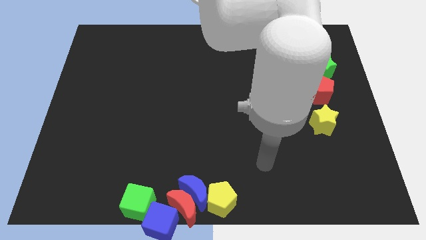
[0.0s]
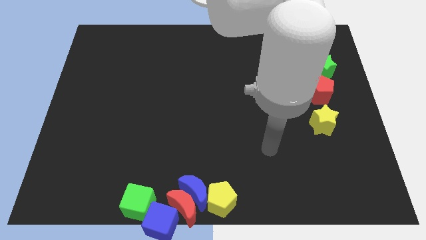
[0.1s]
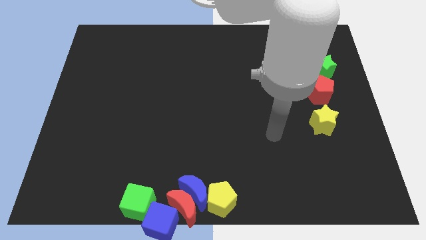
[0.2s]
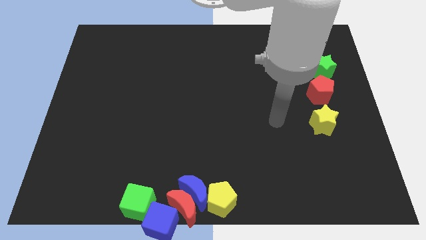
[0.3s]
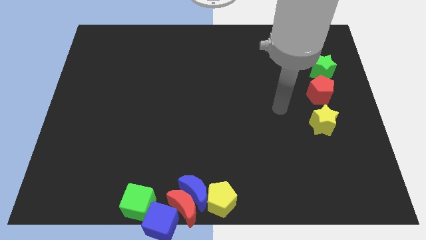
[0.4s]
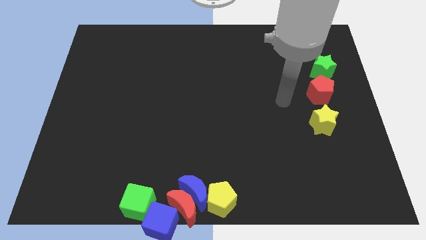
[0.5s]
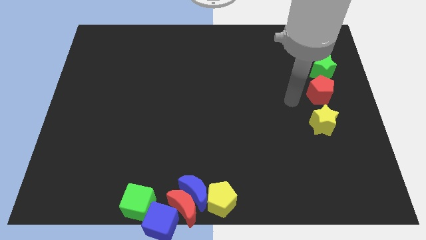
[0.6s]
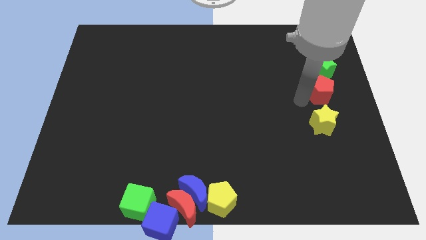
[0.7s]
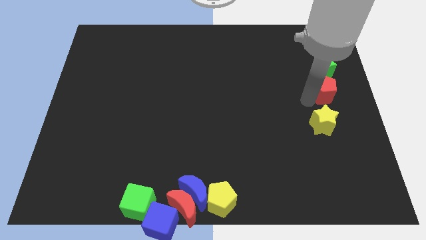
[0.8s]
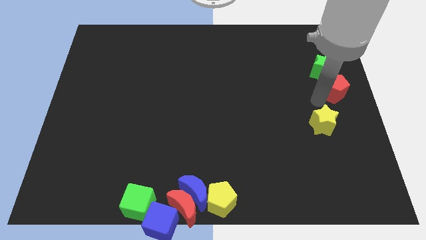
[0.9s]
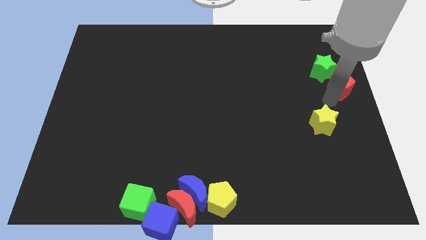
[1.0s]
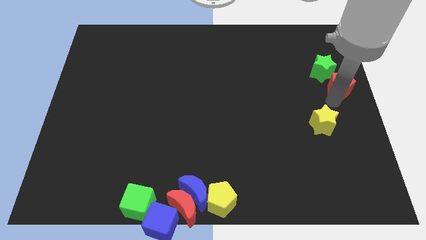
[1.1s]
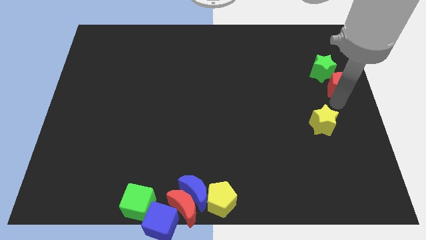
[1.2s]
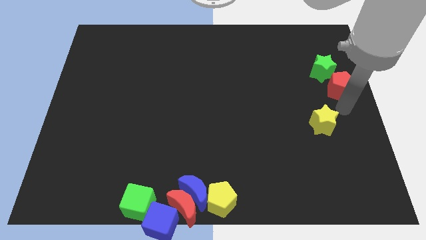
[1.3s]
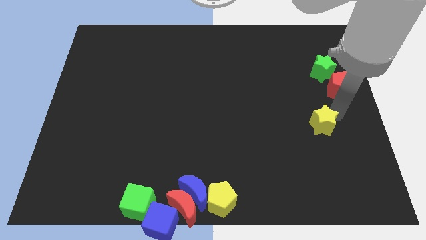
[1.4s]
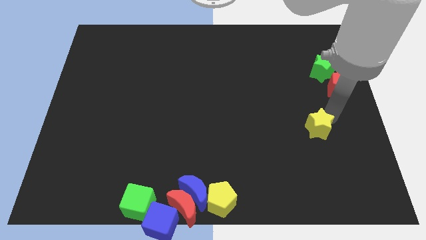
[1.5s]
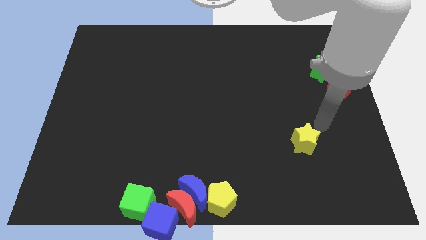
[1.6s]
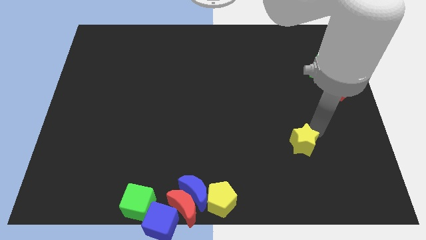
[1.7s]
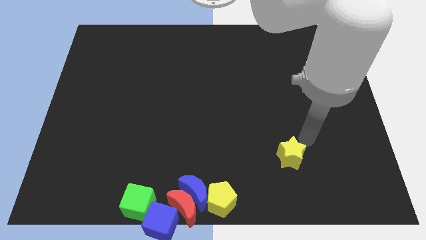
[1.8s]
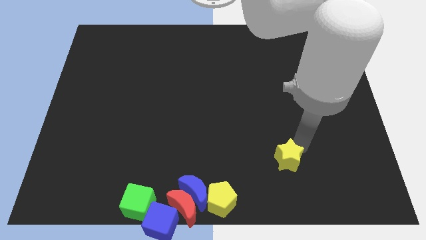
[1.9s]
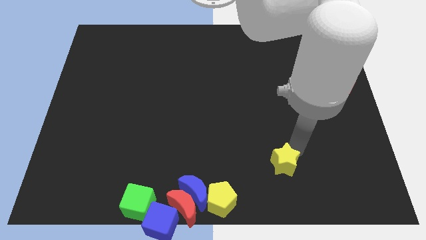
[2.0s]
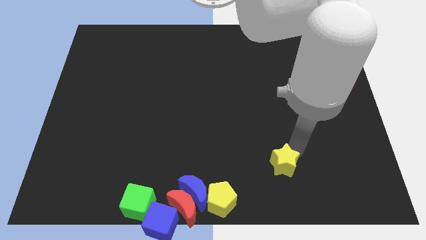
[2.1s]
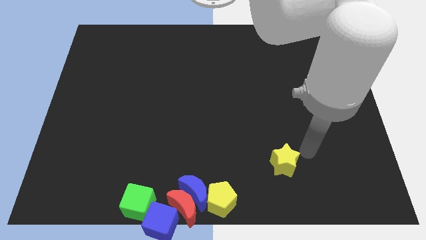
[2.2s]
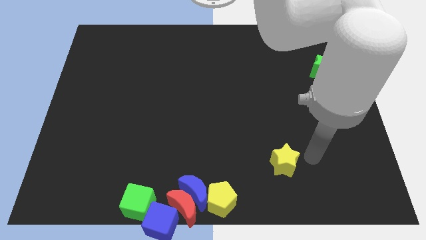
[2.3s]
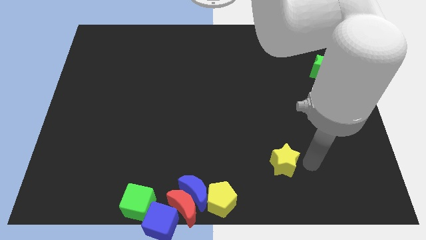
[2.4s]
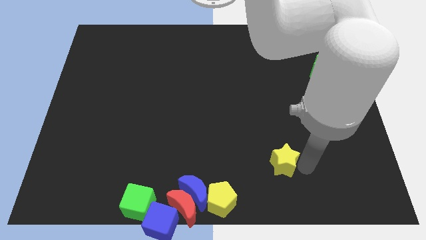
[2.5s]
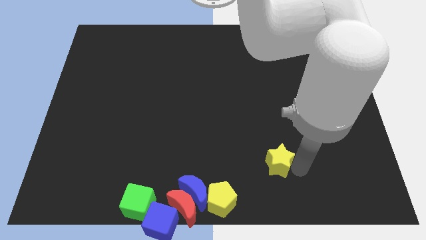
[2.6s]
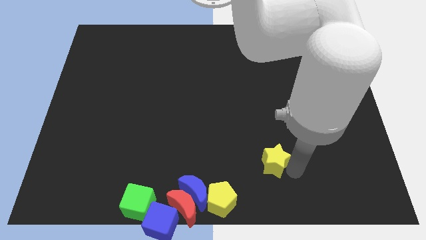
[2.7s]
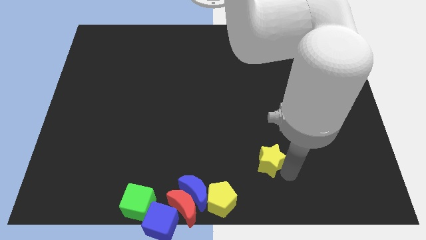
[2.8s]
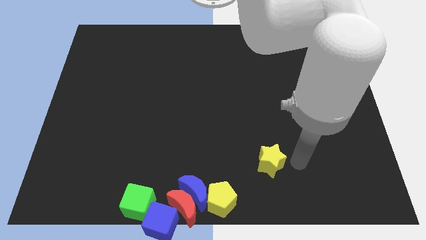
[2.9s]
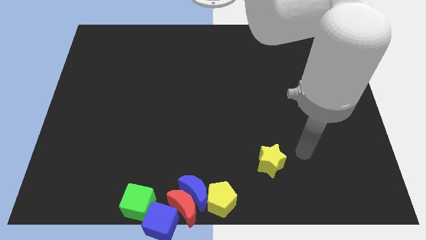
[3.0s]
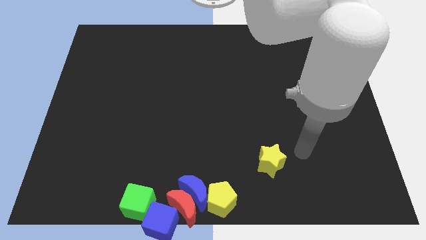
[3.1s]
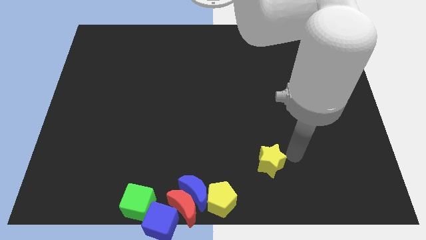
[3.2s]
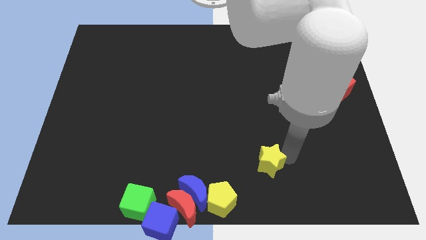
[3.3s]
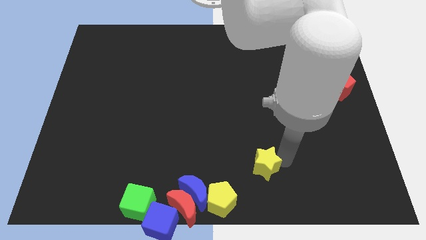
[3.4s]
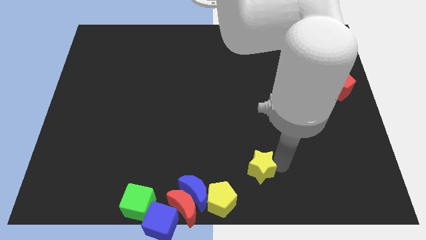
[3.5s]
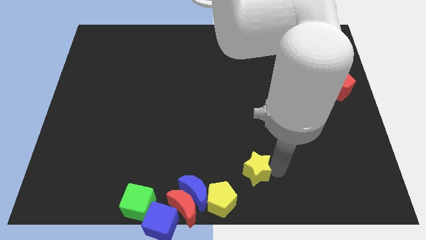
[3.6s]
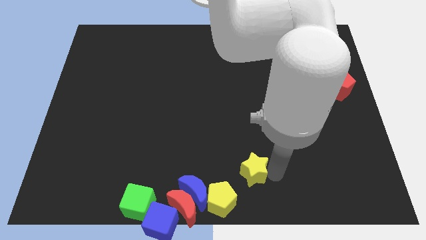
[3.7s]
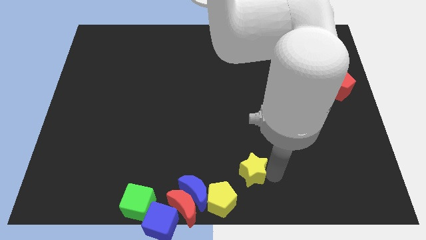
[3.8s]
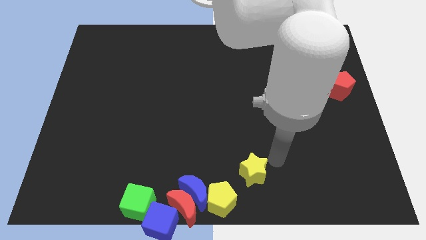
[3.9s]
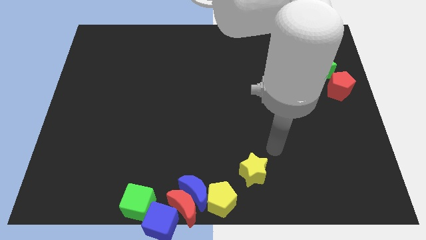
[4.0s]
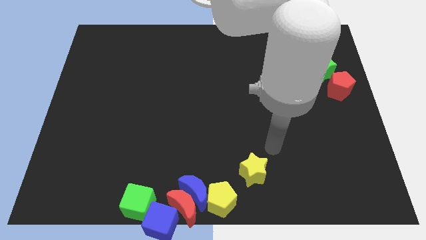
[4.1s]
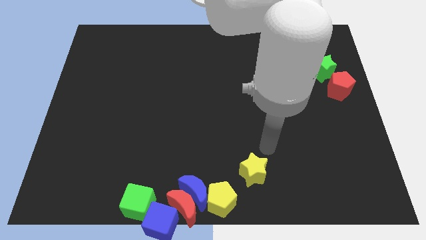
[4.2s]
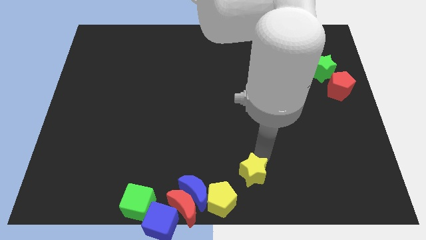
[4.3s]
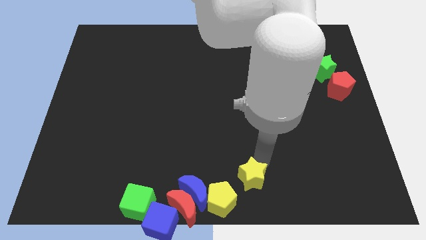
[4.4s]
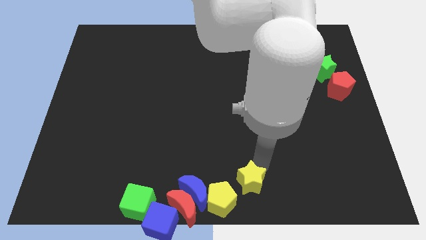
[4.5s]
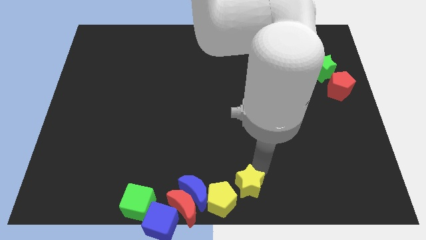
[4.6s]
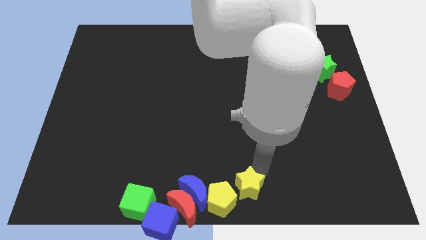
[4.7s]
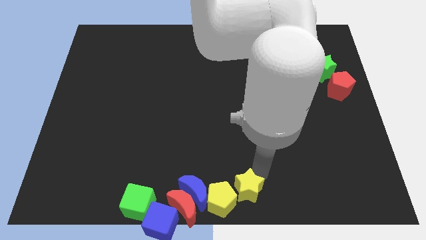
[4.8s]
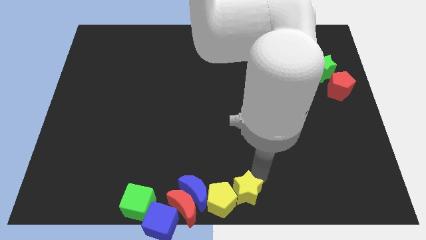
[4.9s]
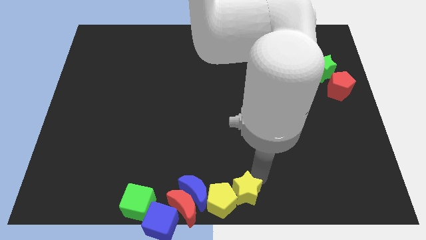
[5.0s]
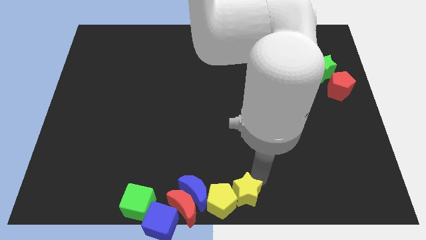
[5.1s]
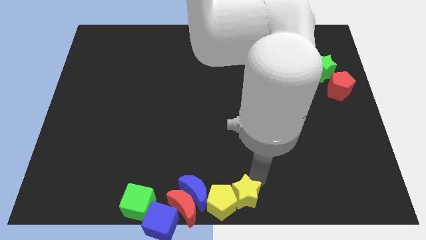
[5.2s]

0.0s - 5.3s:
drag the yellow star into the right side of the yellow pentagon

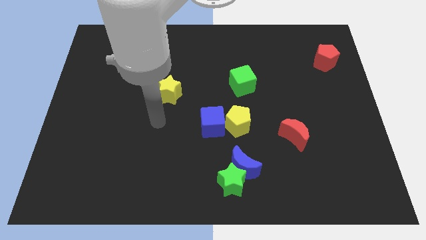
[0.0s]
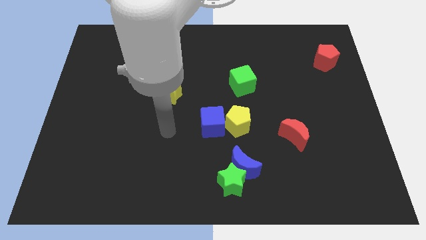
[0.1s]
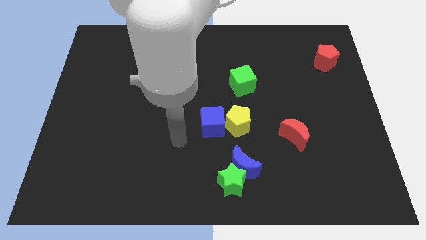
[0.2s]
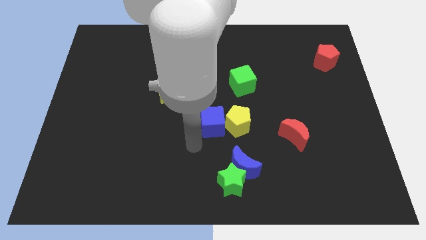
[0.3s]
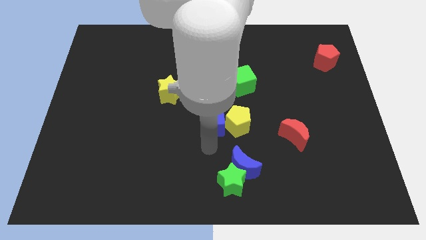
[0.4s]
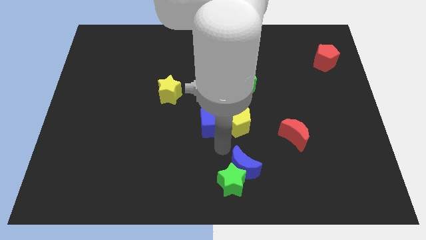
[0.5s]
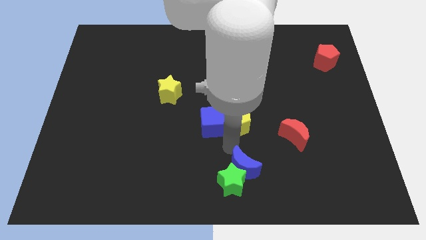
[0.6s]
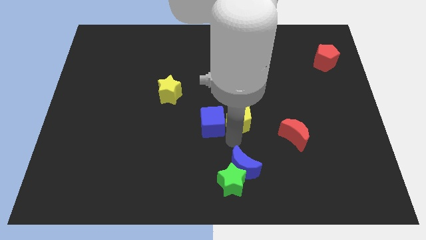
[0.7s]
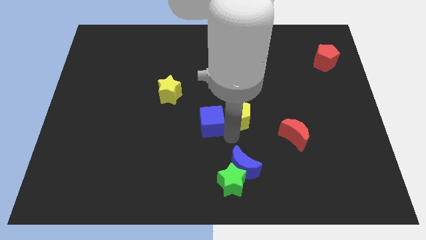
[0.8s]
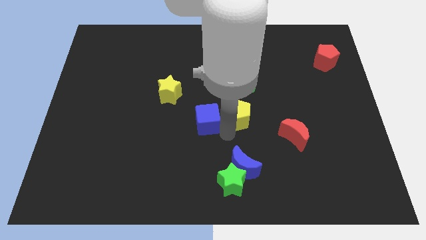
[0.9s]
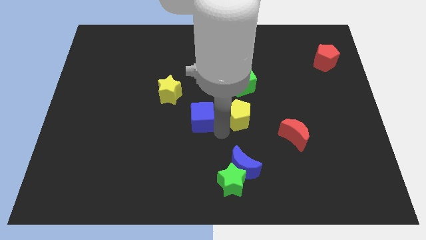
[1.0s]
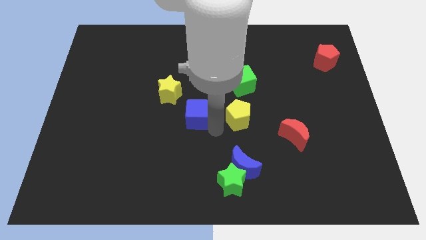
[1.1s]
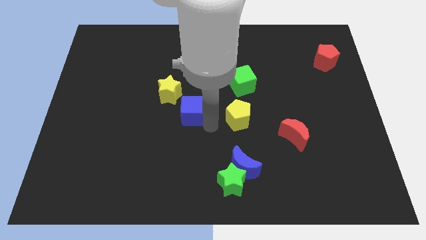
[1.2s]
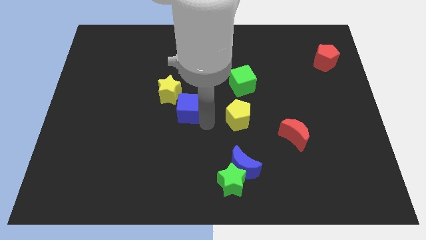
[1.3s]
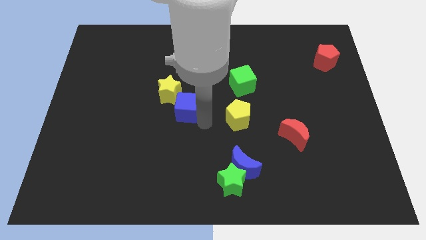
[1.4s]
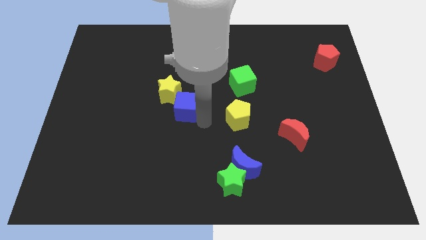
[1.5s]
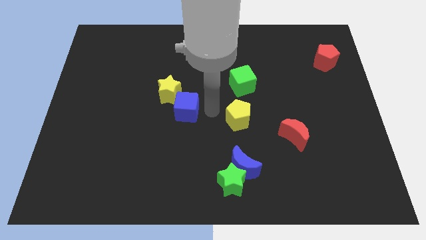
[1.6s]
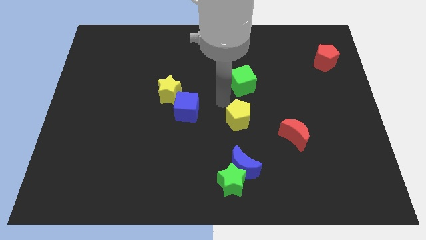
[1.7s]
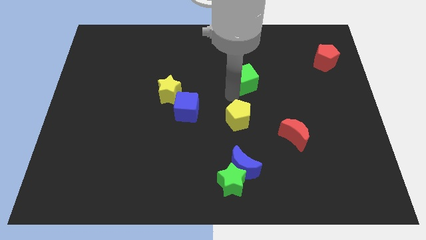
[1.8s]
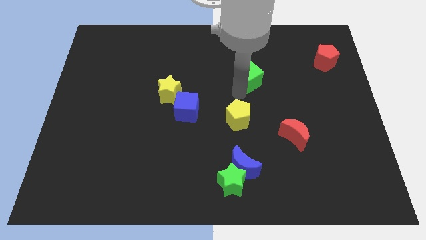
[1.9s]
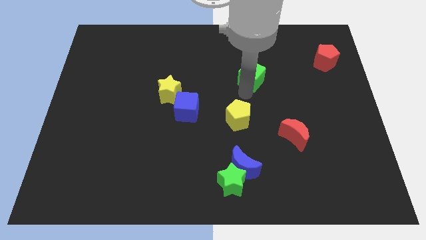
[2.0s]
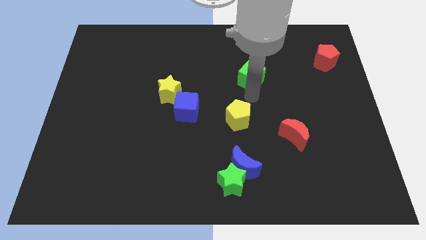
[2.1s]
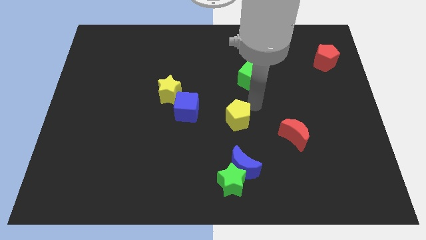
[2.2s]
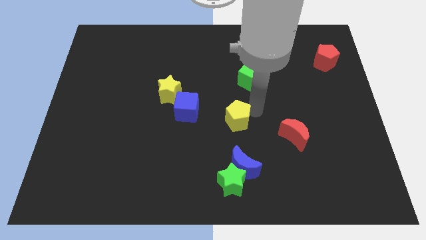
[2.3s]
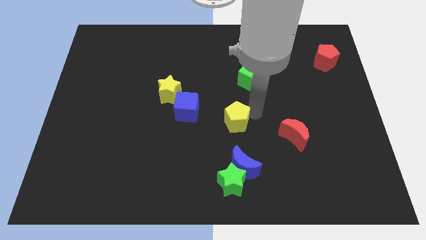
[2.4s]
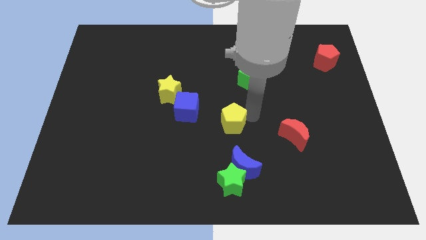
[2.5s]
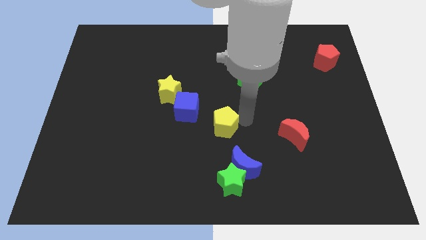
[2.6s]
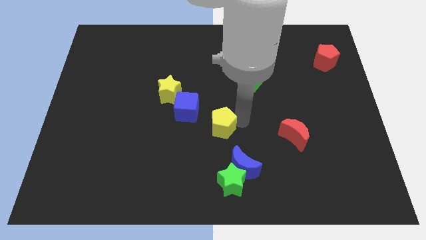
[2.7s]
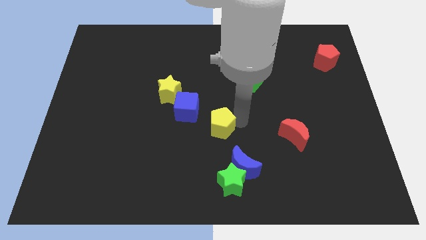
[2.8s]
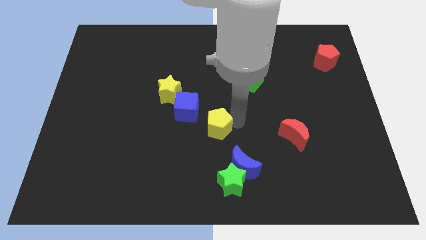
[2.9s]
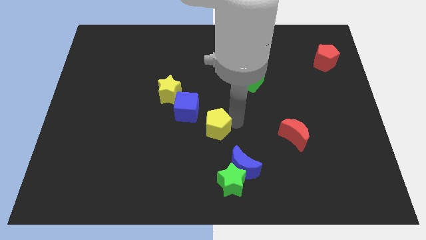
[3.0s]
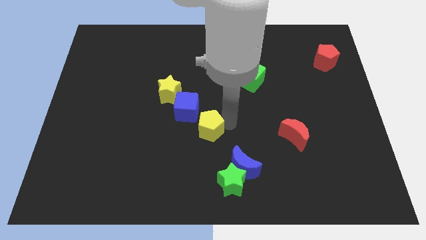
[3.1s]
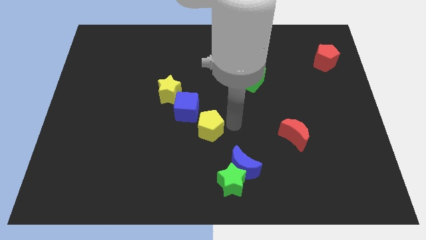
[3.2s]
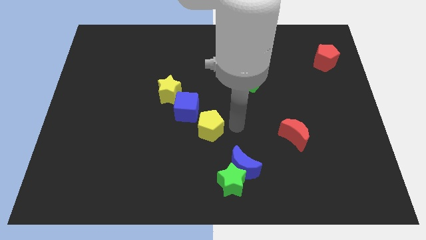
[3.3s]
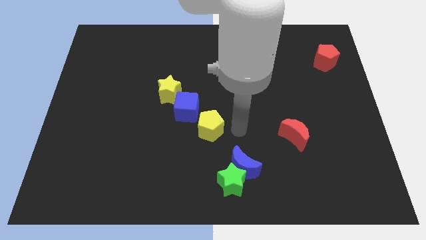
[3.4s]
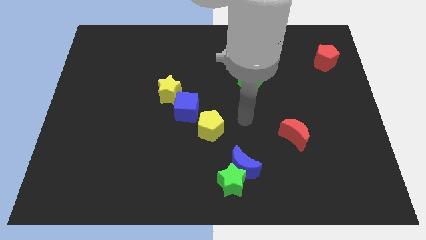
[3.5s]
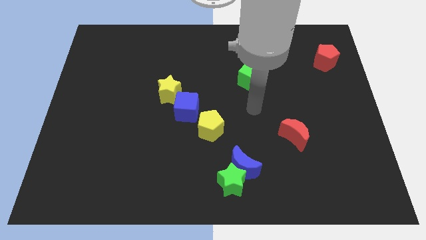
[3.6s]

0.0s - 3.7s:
push the yellow pentagon diagonal bottom right to the blue cube
